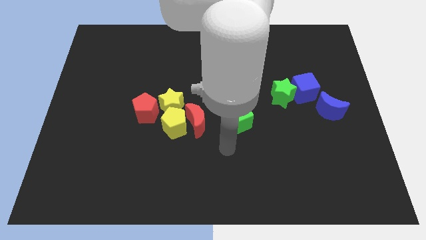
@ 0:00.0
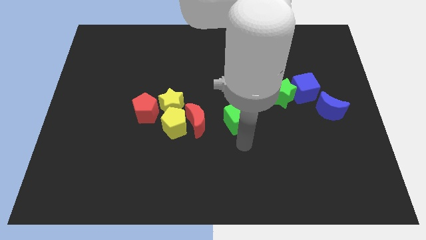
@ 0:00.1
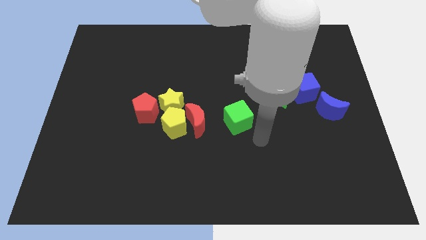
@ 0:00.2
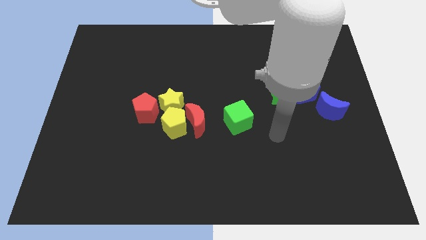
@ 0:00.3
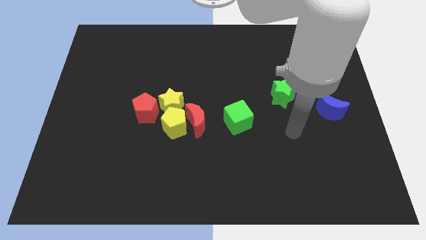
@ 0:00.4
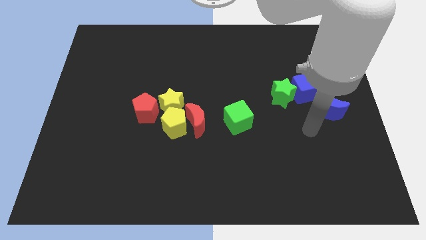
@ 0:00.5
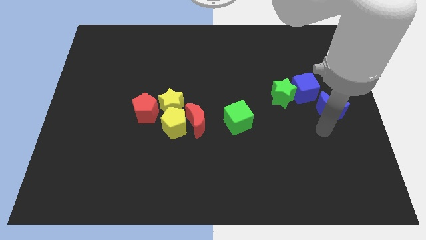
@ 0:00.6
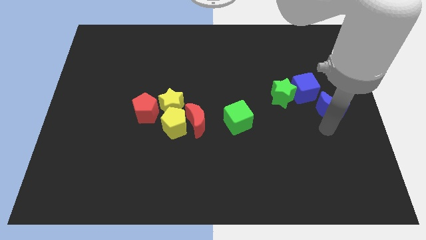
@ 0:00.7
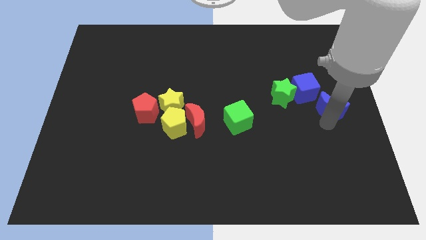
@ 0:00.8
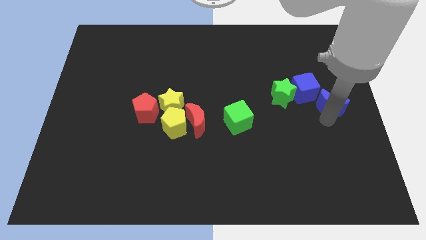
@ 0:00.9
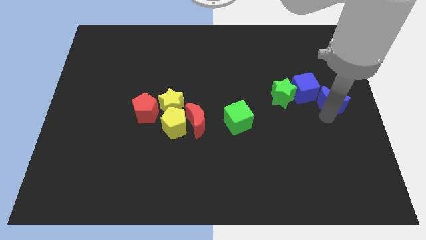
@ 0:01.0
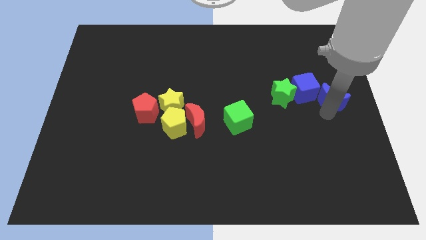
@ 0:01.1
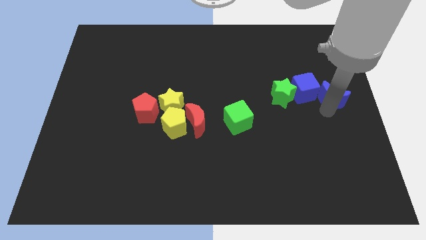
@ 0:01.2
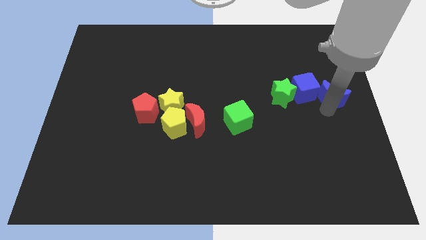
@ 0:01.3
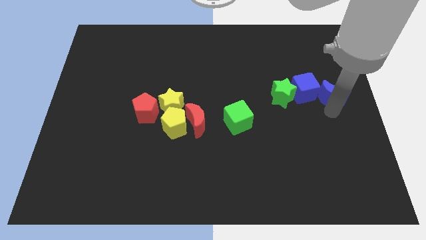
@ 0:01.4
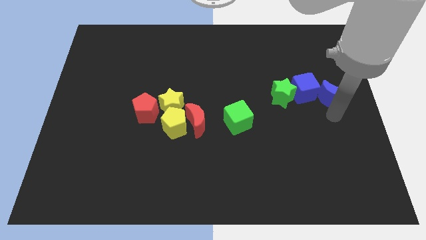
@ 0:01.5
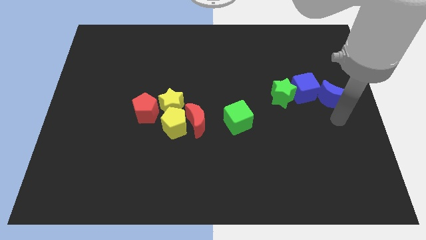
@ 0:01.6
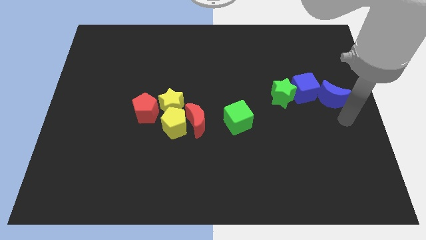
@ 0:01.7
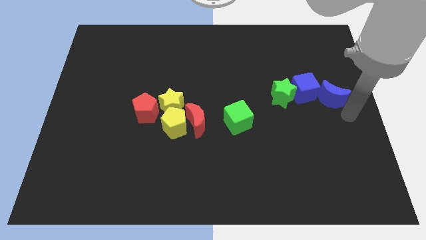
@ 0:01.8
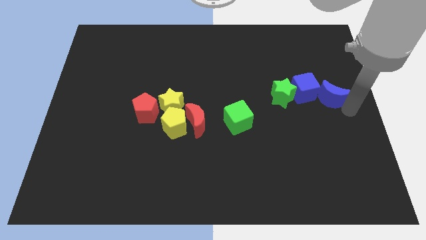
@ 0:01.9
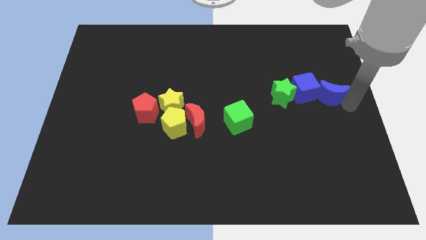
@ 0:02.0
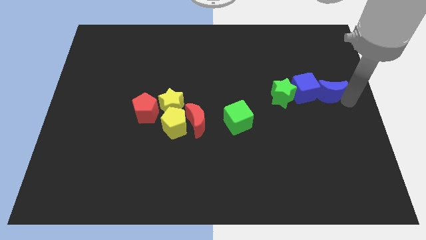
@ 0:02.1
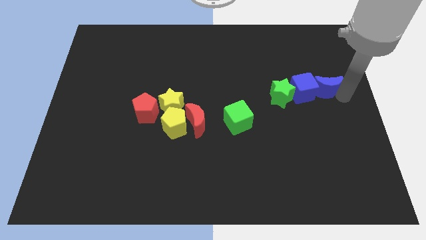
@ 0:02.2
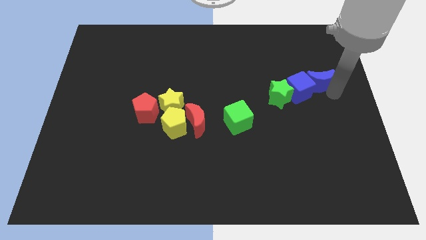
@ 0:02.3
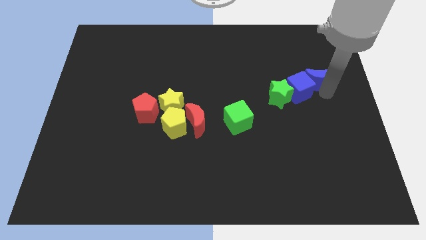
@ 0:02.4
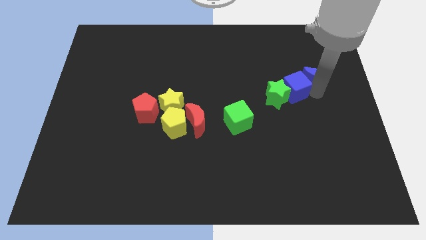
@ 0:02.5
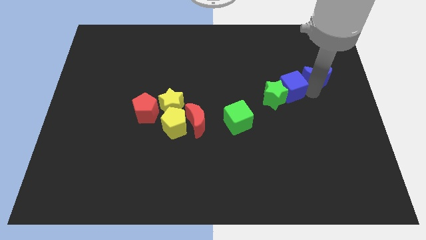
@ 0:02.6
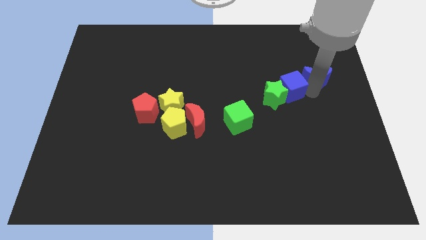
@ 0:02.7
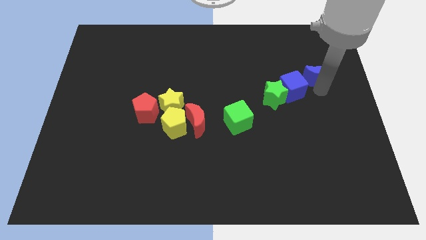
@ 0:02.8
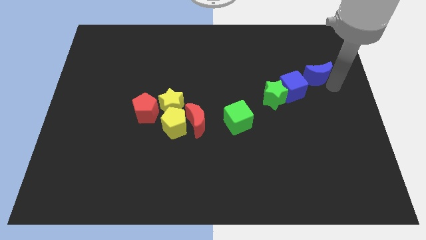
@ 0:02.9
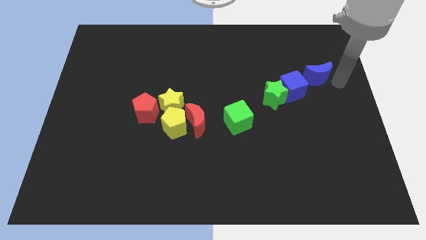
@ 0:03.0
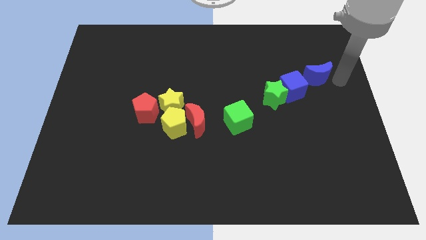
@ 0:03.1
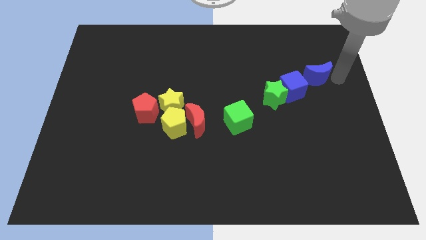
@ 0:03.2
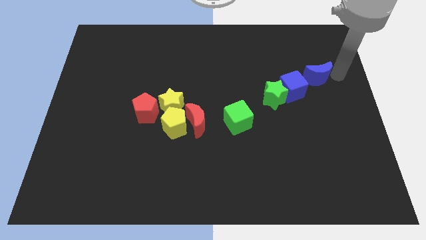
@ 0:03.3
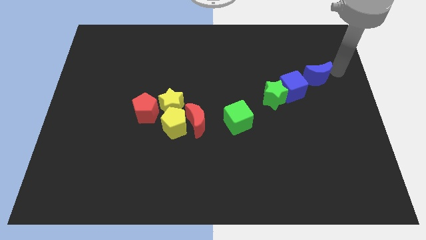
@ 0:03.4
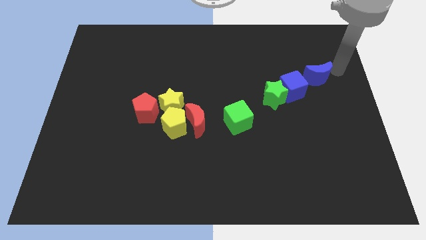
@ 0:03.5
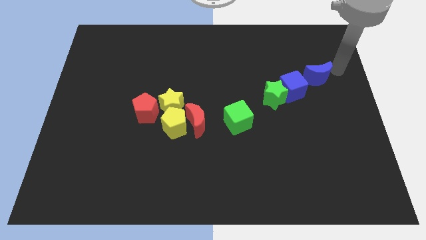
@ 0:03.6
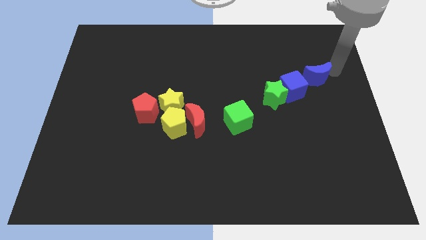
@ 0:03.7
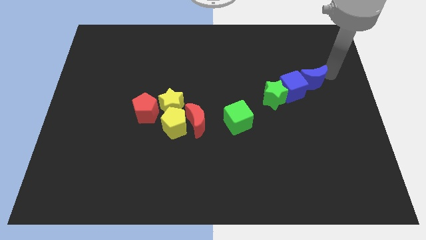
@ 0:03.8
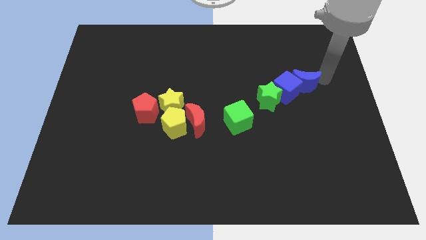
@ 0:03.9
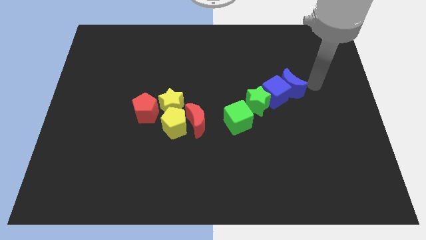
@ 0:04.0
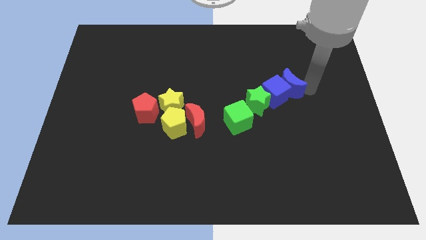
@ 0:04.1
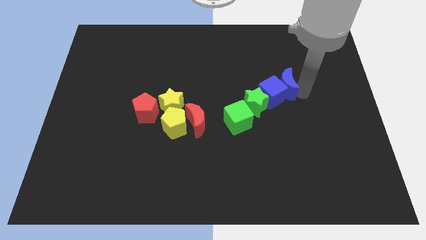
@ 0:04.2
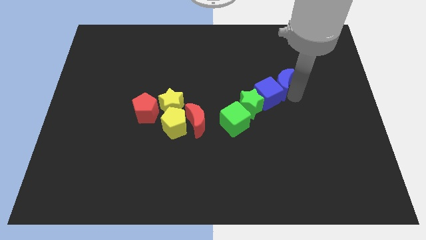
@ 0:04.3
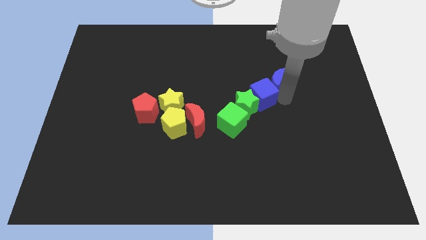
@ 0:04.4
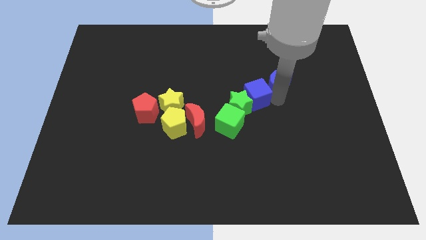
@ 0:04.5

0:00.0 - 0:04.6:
push the blue crescent into the blue cube

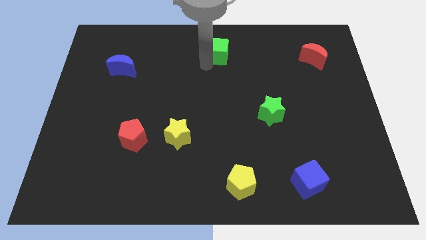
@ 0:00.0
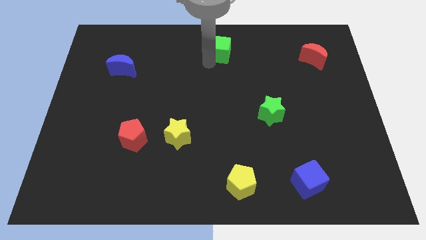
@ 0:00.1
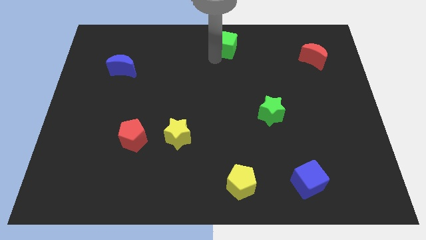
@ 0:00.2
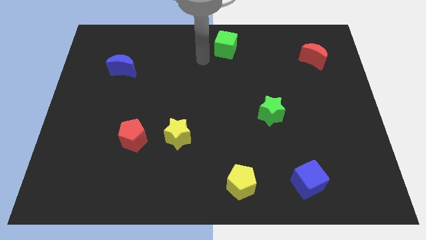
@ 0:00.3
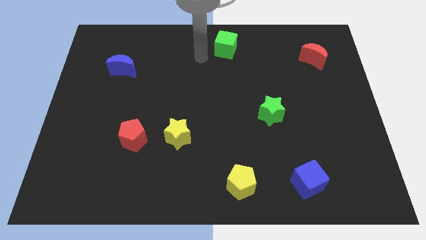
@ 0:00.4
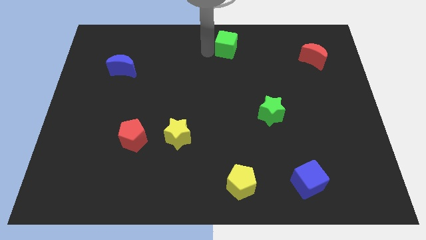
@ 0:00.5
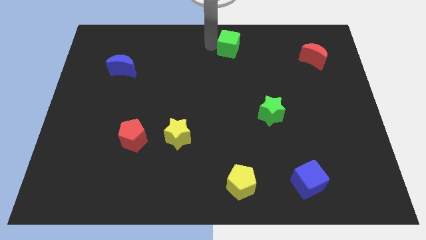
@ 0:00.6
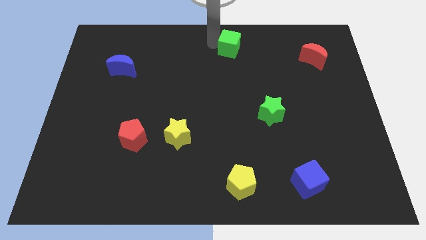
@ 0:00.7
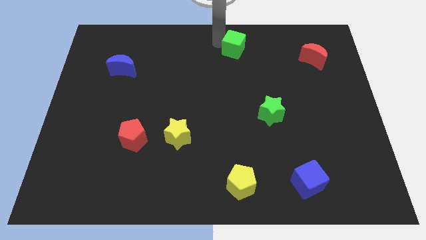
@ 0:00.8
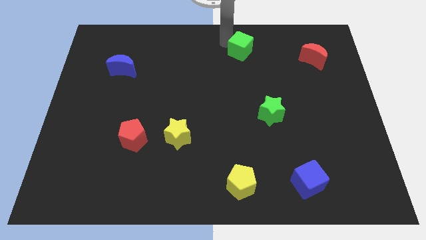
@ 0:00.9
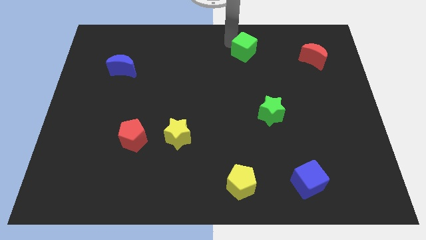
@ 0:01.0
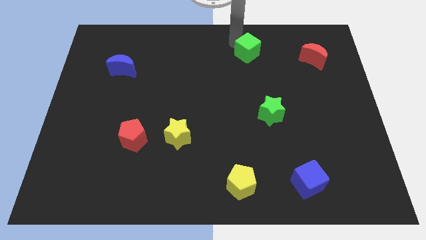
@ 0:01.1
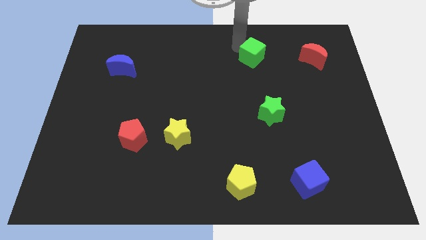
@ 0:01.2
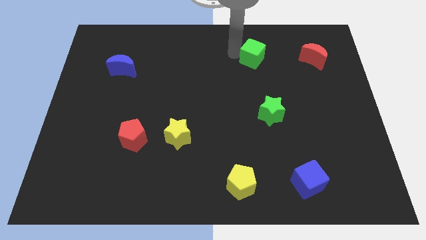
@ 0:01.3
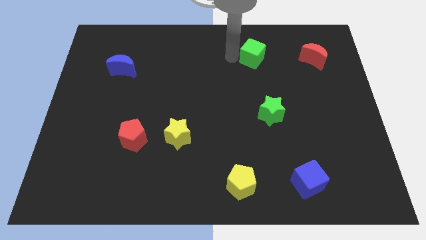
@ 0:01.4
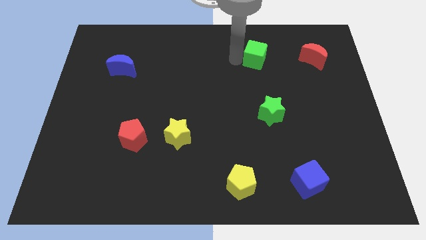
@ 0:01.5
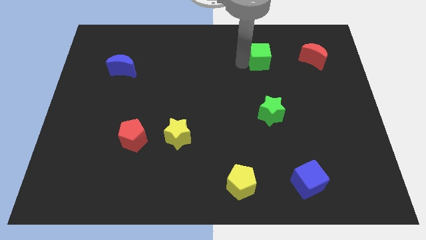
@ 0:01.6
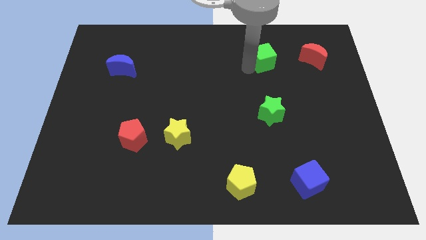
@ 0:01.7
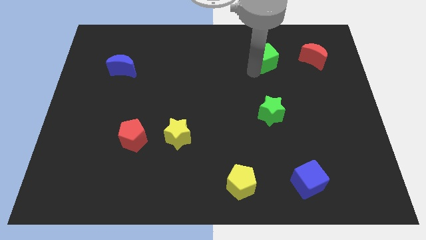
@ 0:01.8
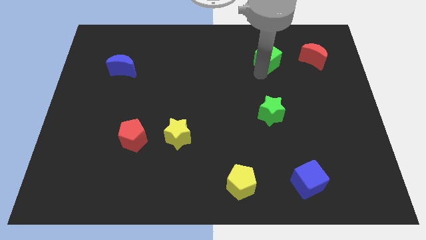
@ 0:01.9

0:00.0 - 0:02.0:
push the green cube slightly right side

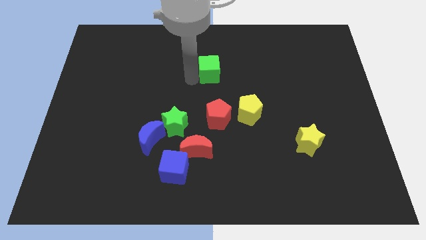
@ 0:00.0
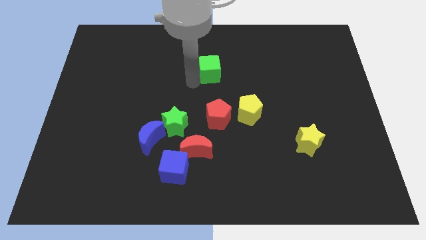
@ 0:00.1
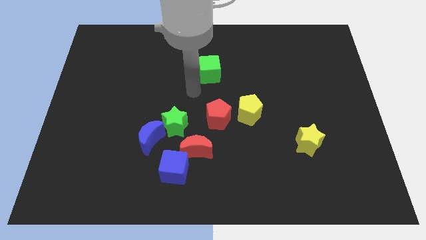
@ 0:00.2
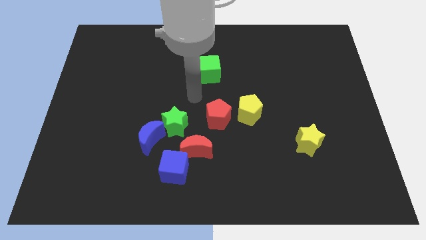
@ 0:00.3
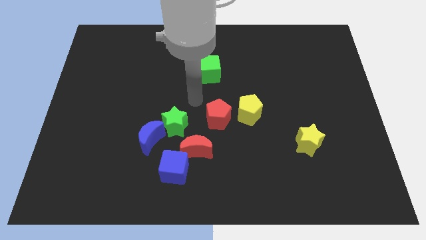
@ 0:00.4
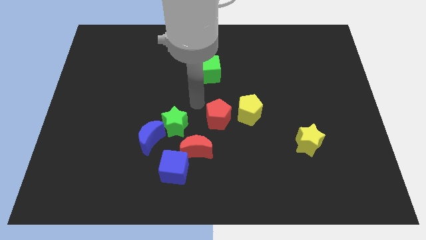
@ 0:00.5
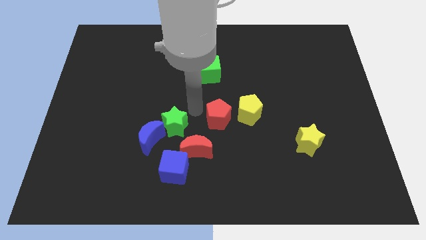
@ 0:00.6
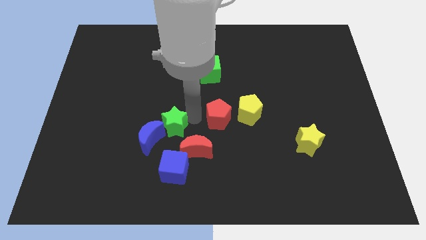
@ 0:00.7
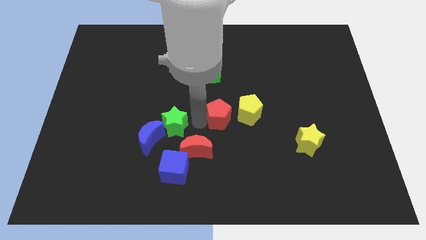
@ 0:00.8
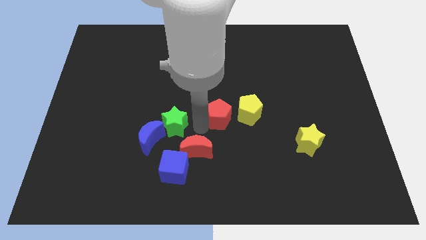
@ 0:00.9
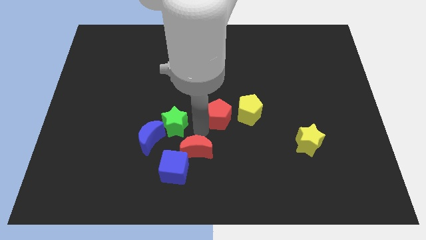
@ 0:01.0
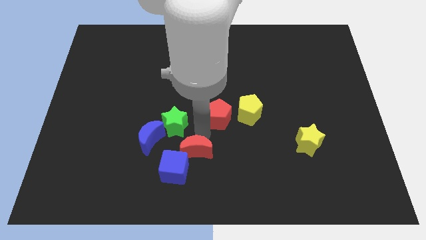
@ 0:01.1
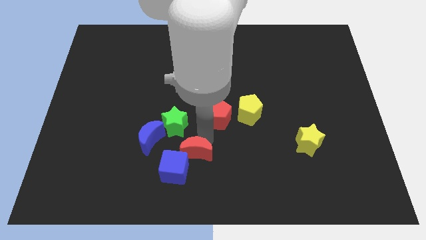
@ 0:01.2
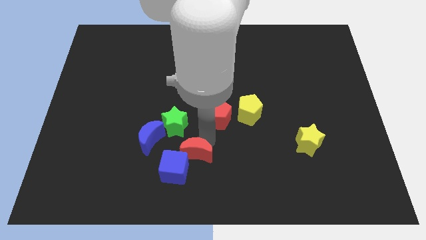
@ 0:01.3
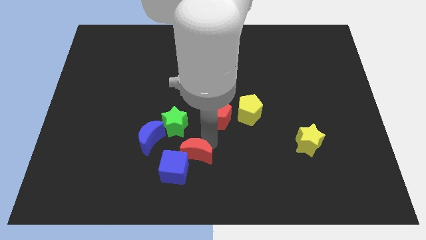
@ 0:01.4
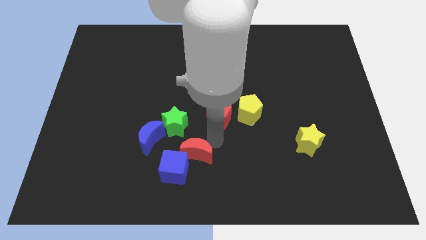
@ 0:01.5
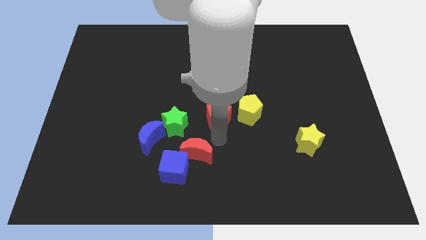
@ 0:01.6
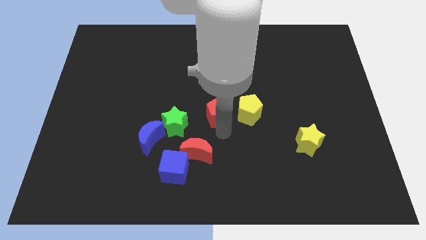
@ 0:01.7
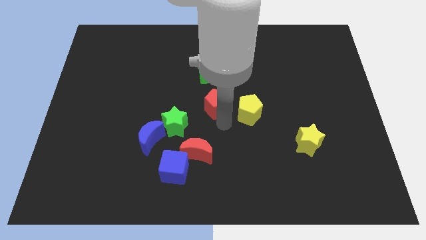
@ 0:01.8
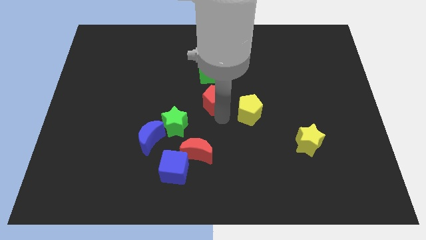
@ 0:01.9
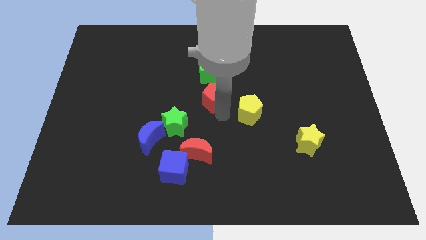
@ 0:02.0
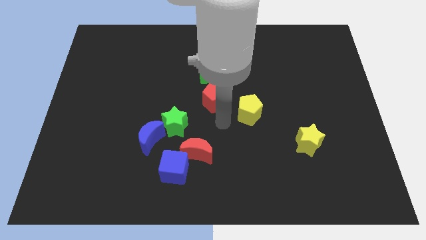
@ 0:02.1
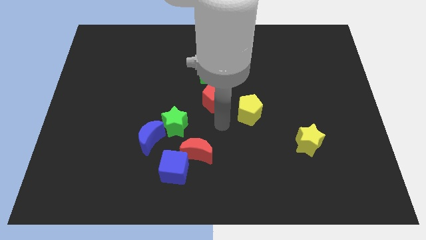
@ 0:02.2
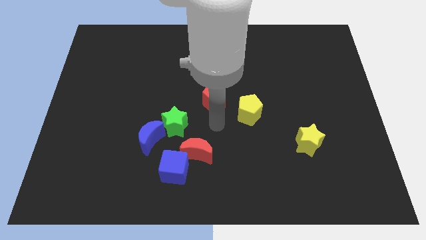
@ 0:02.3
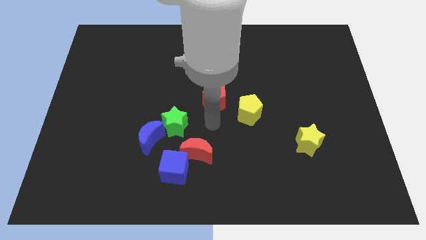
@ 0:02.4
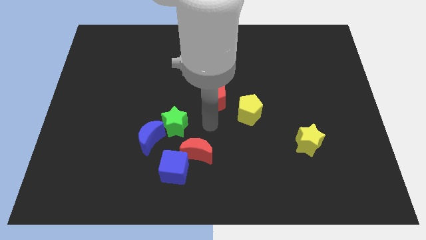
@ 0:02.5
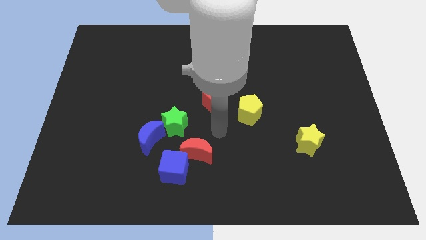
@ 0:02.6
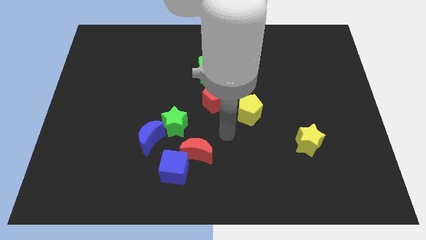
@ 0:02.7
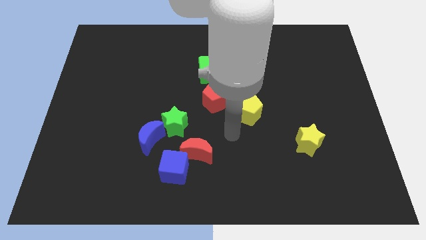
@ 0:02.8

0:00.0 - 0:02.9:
push red pentagon at the bottom of the green cube
